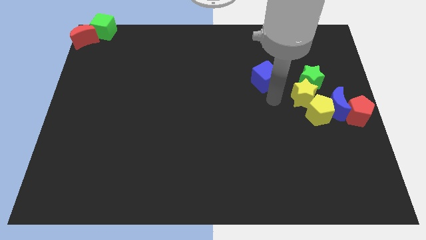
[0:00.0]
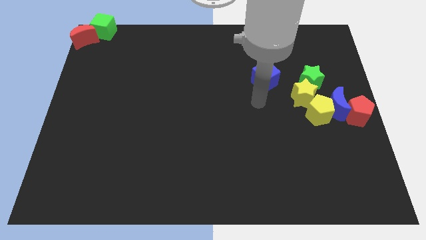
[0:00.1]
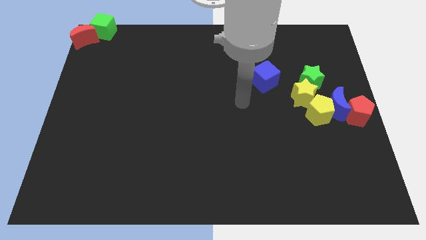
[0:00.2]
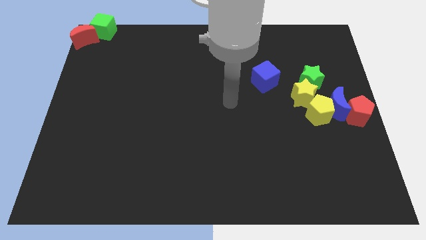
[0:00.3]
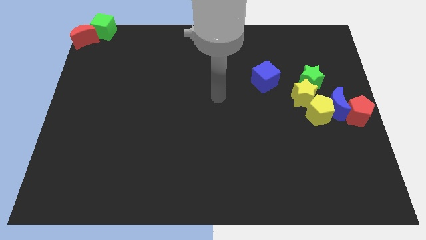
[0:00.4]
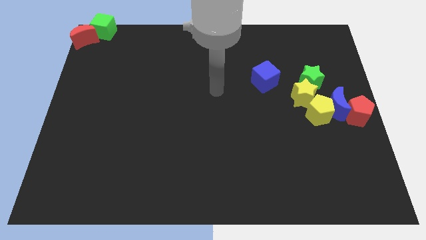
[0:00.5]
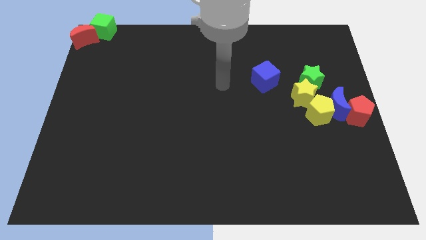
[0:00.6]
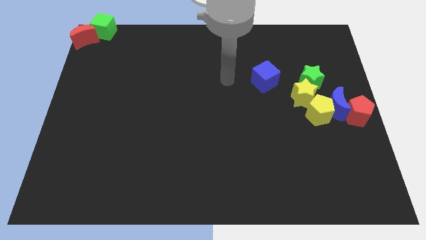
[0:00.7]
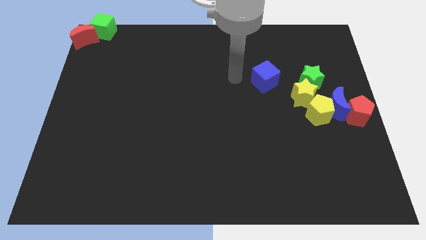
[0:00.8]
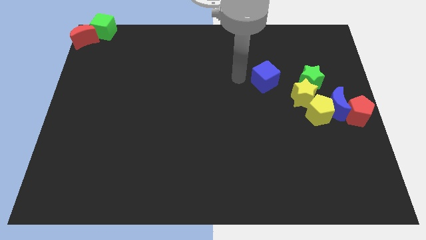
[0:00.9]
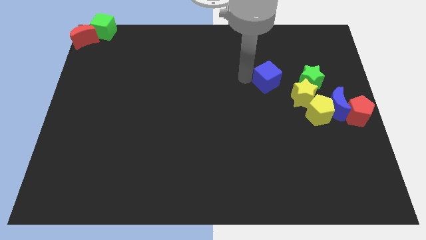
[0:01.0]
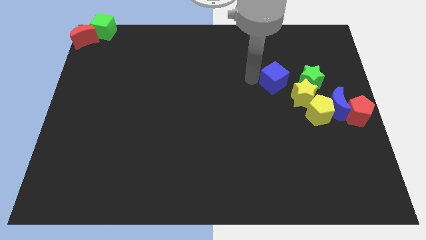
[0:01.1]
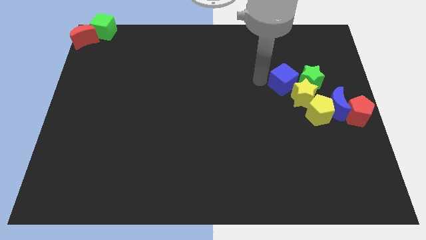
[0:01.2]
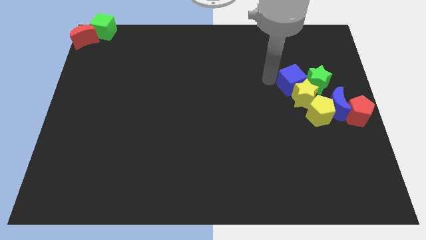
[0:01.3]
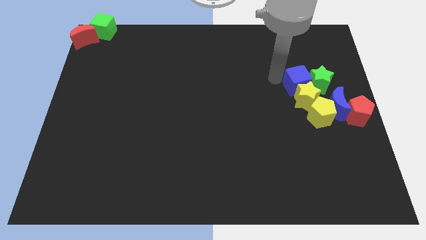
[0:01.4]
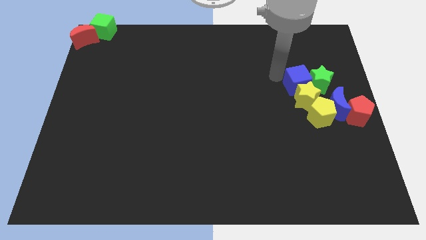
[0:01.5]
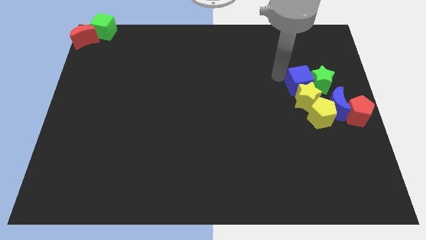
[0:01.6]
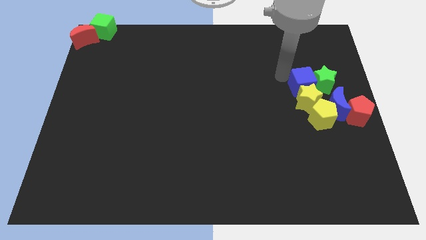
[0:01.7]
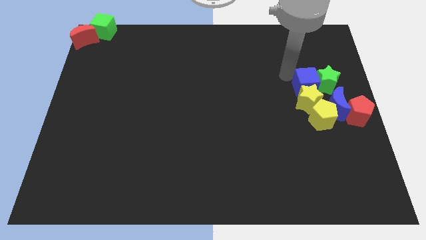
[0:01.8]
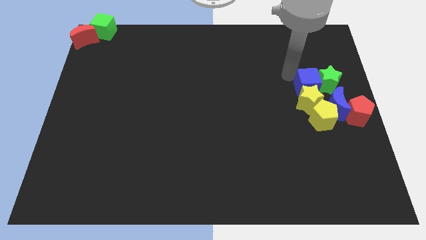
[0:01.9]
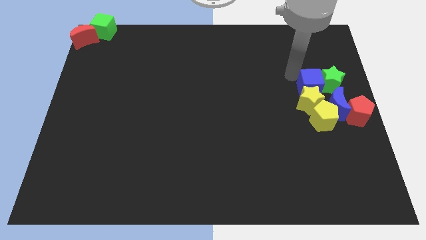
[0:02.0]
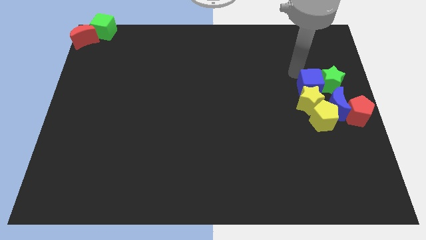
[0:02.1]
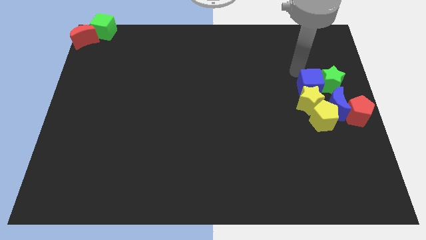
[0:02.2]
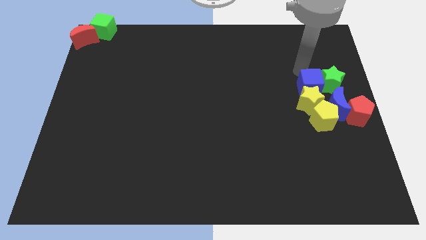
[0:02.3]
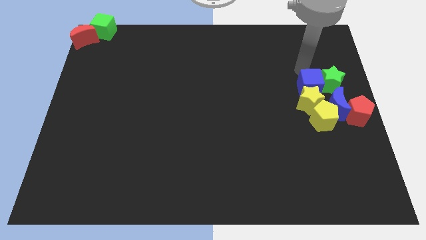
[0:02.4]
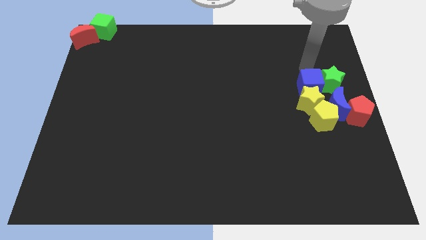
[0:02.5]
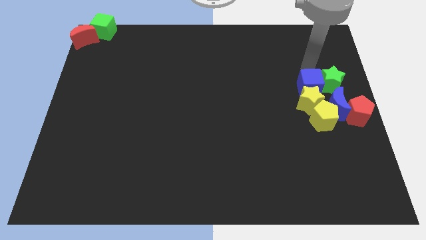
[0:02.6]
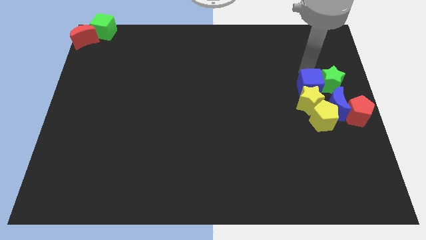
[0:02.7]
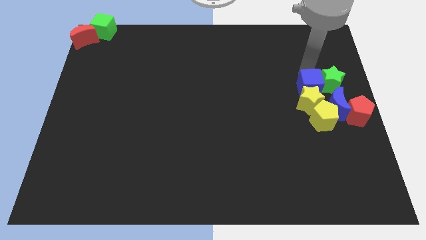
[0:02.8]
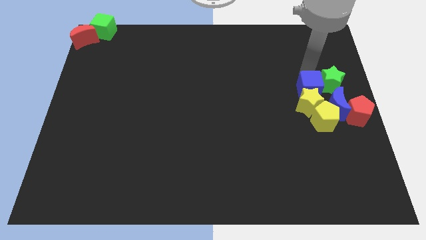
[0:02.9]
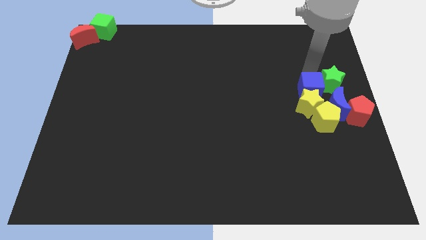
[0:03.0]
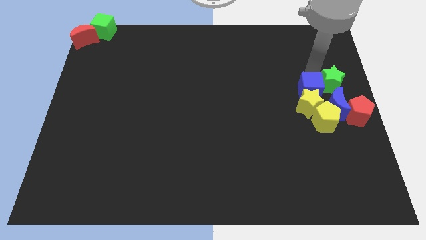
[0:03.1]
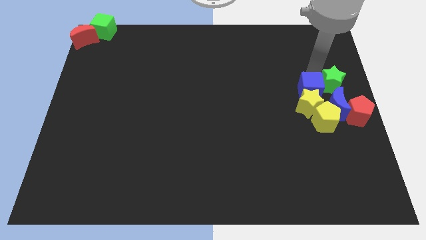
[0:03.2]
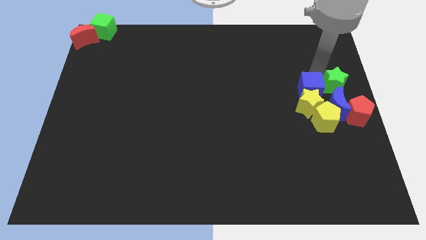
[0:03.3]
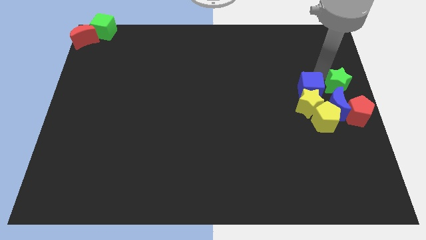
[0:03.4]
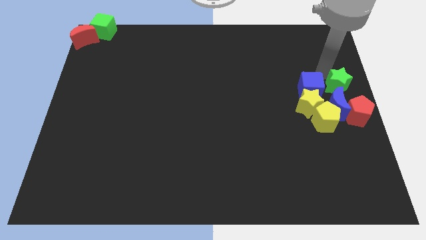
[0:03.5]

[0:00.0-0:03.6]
move the blue cube to the group of blocks

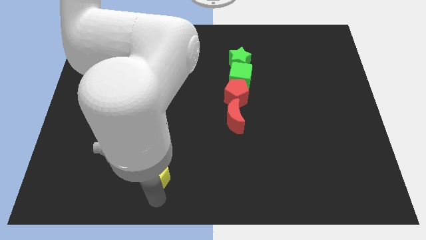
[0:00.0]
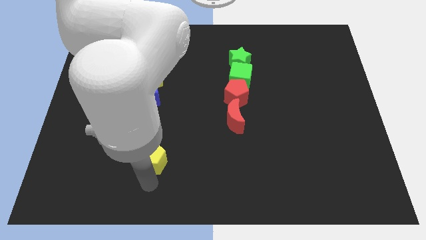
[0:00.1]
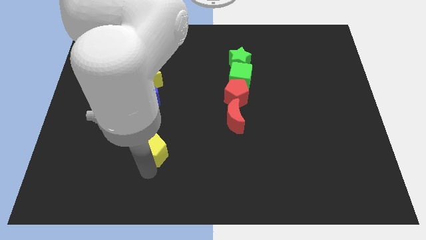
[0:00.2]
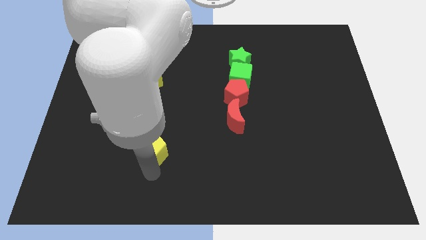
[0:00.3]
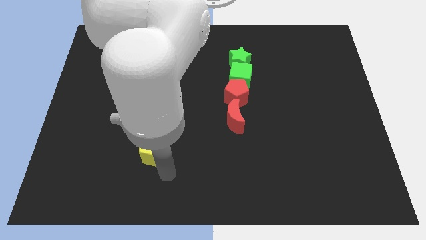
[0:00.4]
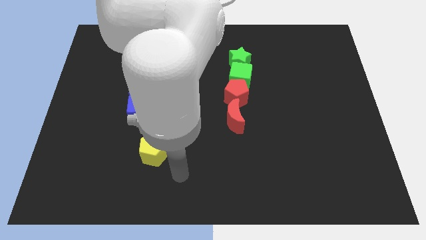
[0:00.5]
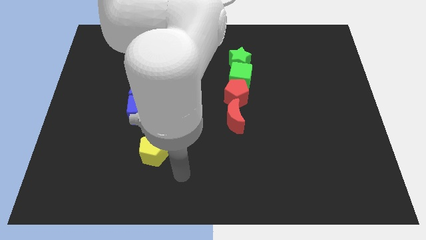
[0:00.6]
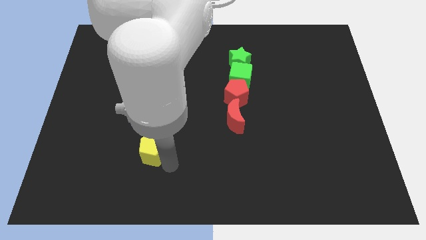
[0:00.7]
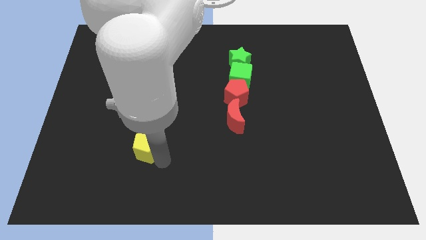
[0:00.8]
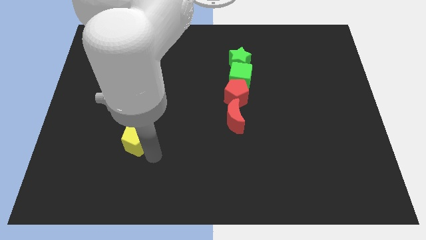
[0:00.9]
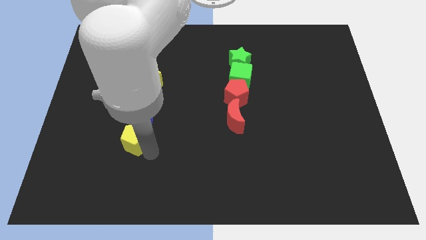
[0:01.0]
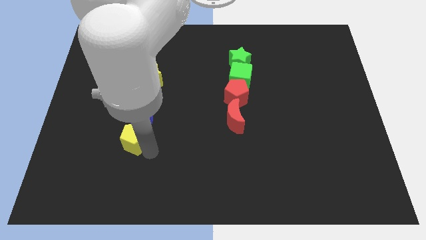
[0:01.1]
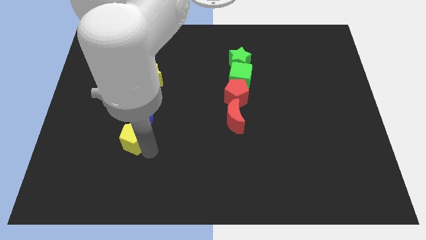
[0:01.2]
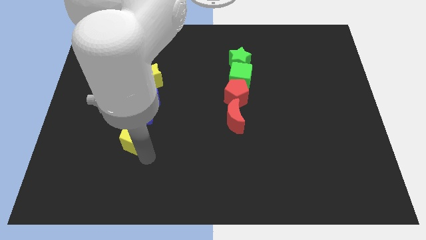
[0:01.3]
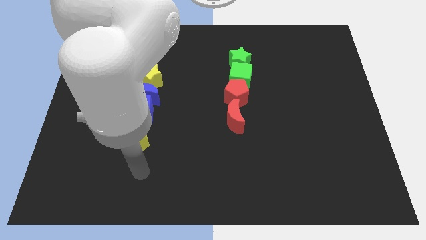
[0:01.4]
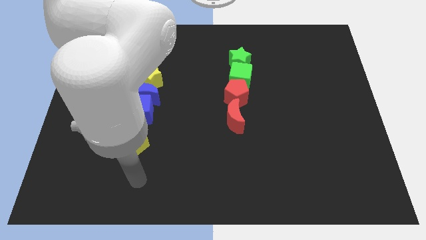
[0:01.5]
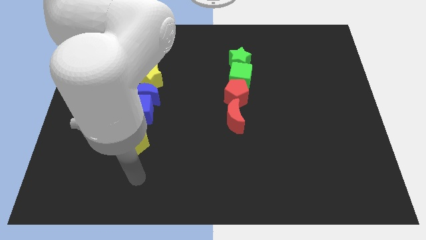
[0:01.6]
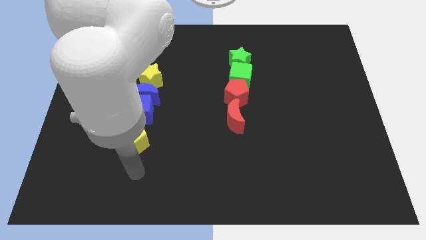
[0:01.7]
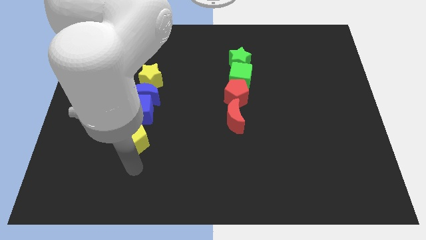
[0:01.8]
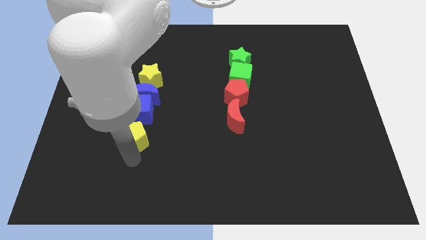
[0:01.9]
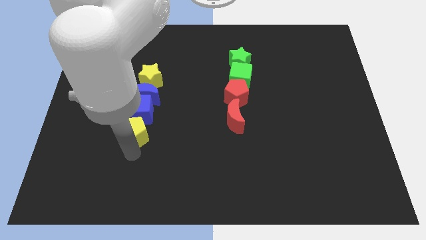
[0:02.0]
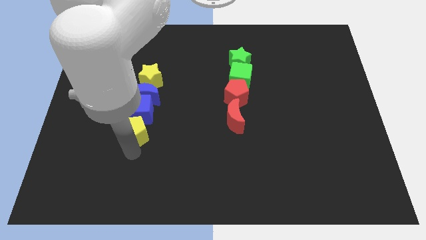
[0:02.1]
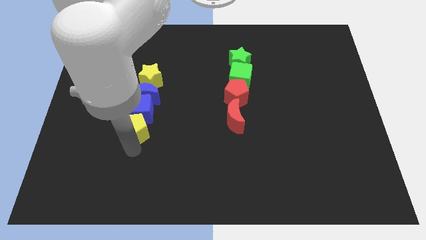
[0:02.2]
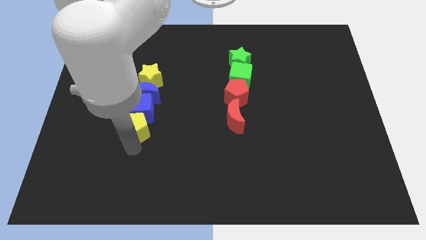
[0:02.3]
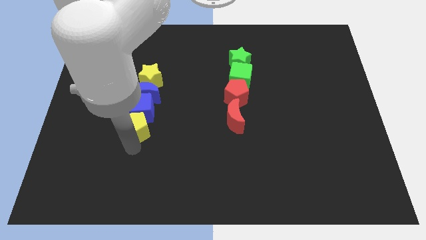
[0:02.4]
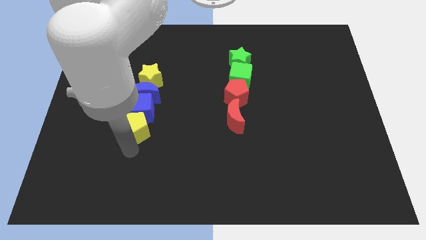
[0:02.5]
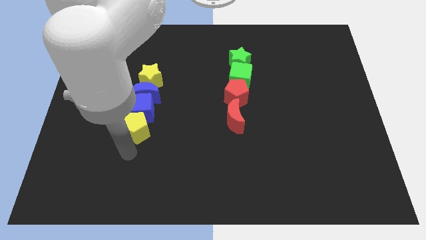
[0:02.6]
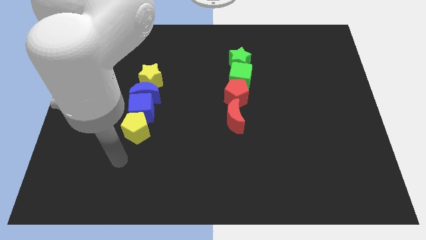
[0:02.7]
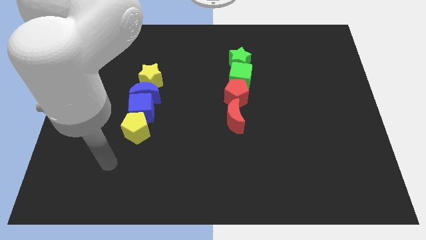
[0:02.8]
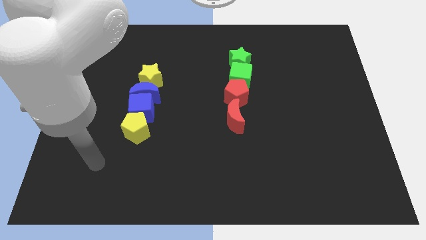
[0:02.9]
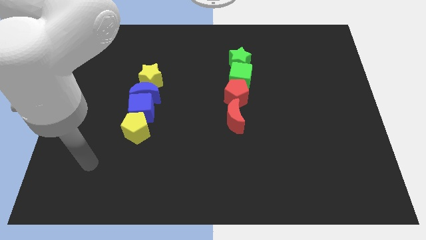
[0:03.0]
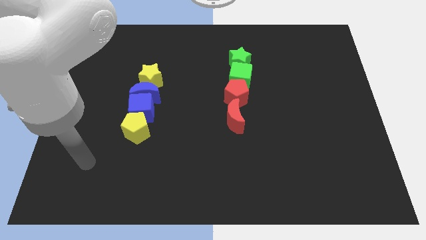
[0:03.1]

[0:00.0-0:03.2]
put the yellow pentagon to the bottom side of the blue cube

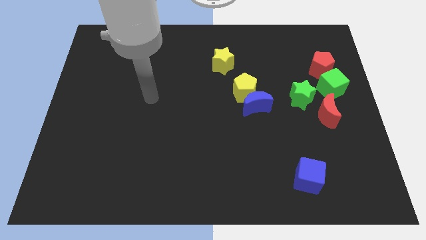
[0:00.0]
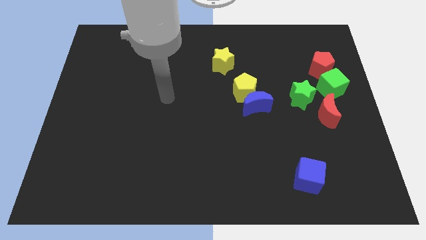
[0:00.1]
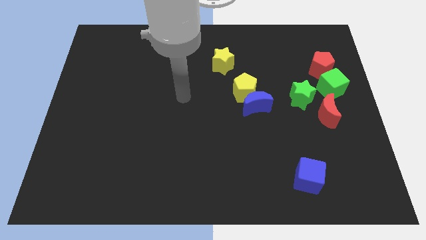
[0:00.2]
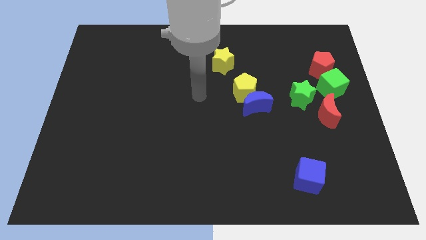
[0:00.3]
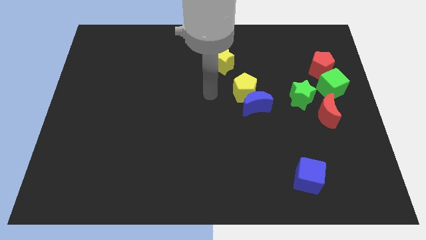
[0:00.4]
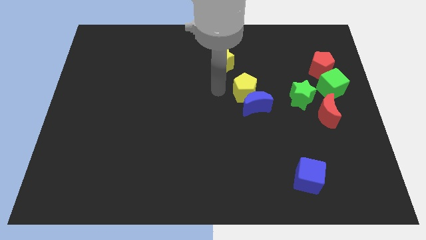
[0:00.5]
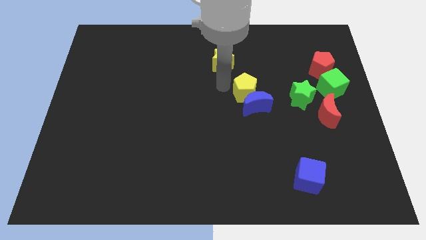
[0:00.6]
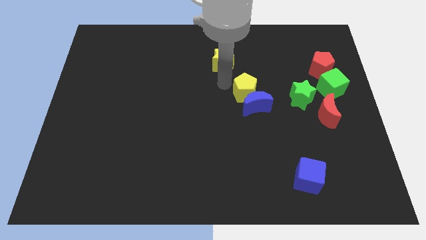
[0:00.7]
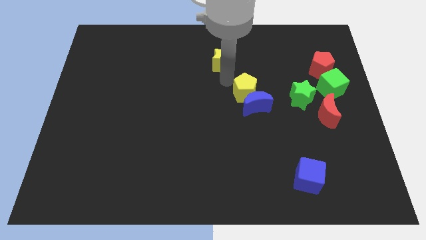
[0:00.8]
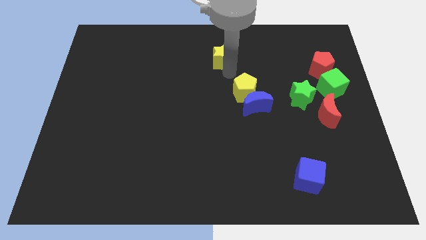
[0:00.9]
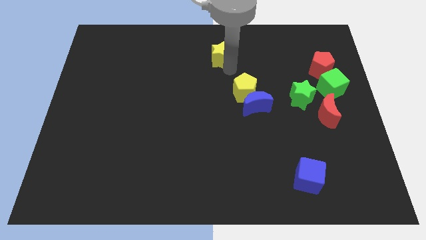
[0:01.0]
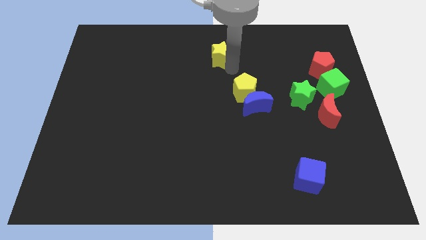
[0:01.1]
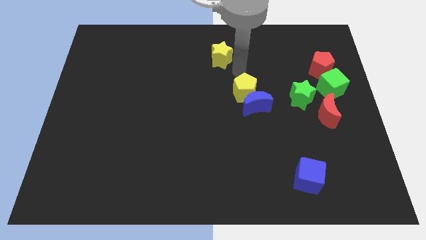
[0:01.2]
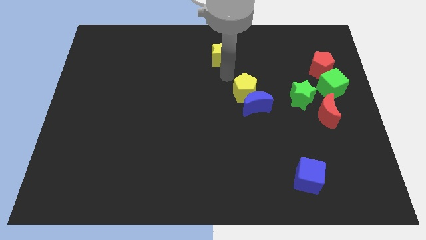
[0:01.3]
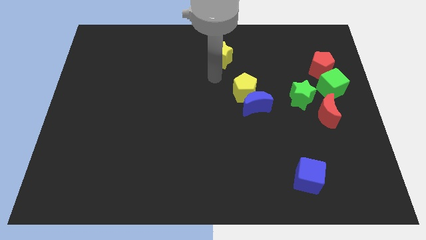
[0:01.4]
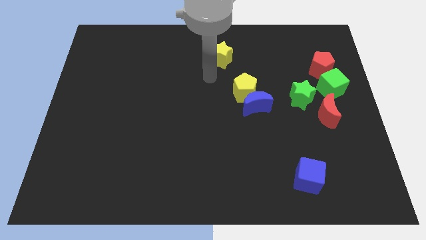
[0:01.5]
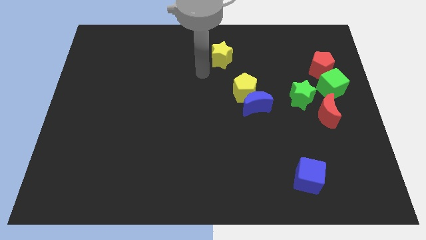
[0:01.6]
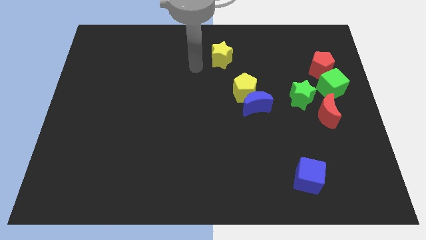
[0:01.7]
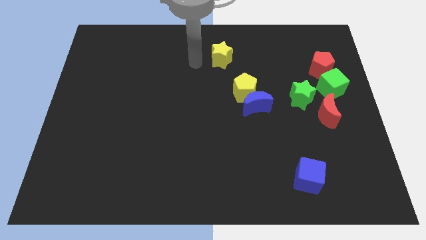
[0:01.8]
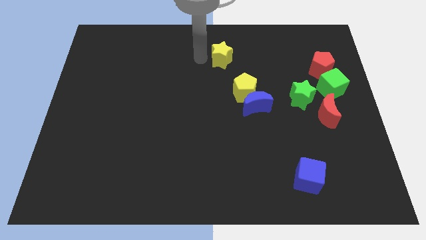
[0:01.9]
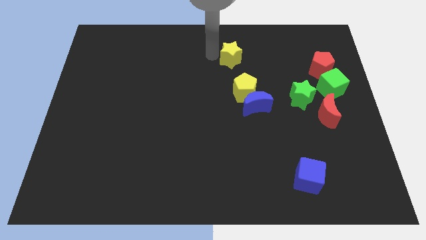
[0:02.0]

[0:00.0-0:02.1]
move the yellow star center top of the board
